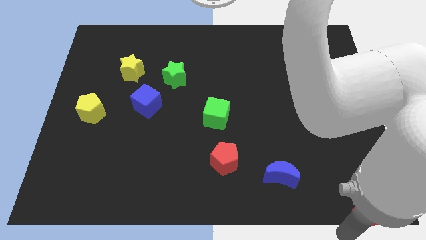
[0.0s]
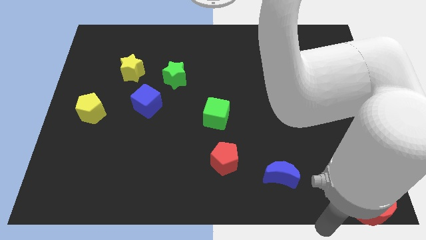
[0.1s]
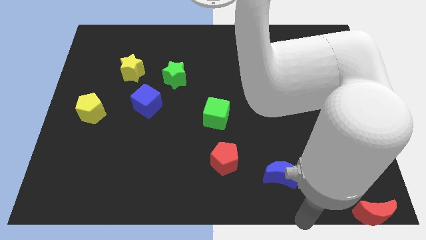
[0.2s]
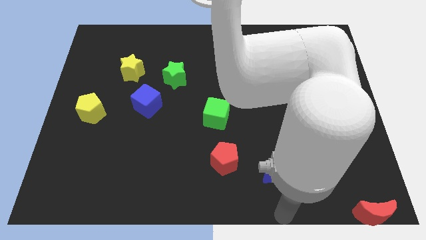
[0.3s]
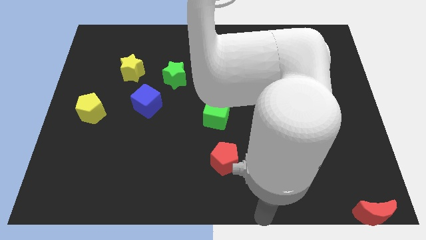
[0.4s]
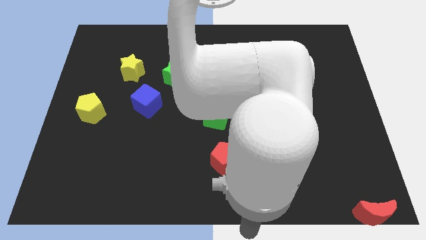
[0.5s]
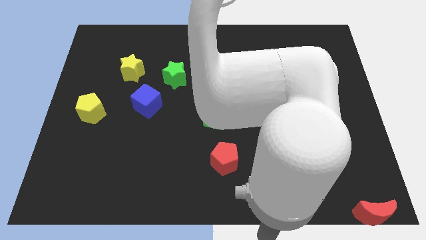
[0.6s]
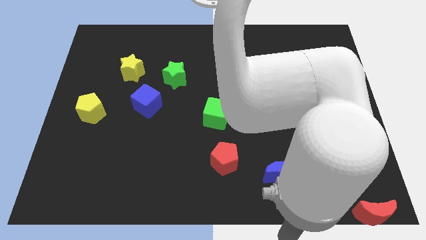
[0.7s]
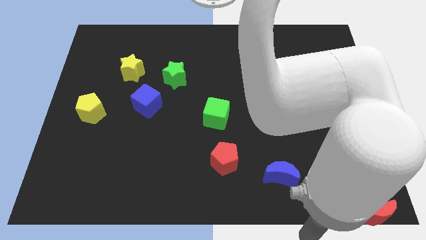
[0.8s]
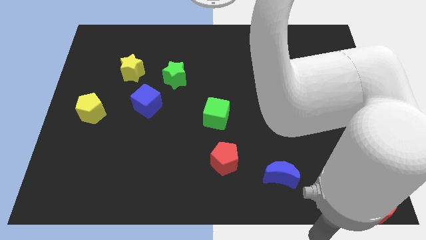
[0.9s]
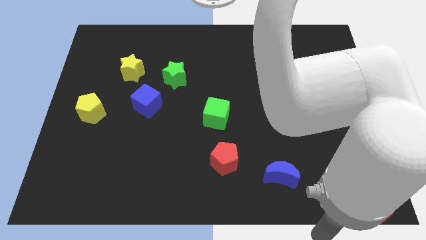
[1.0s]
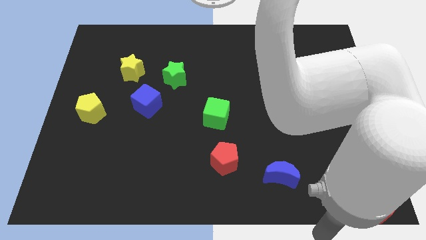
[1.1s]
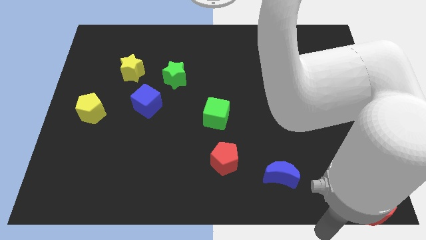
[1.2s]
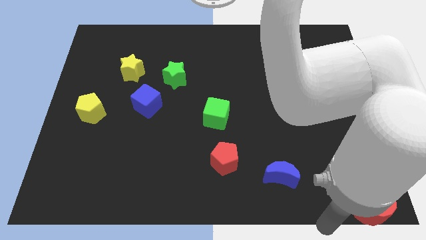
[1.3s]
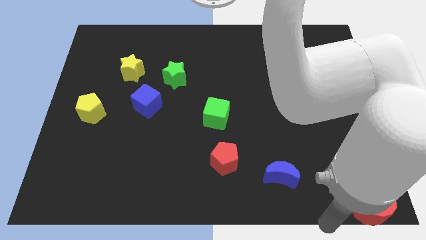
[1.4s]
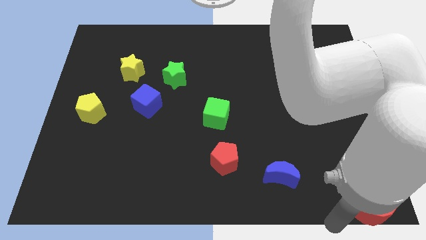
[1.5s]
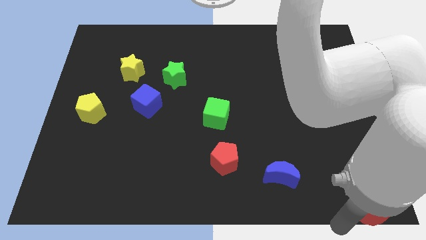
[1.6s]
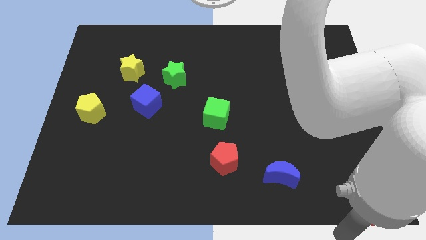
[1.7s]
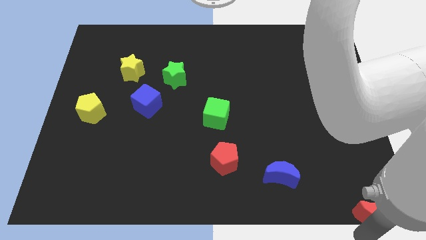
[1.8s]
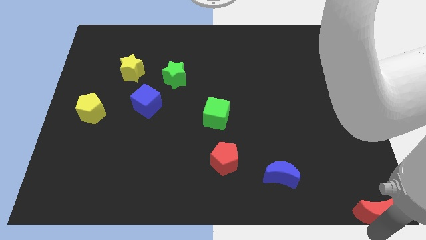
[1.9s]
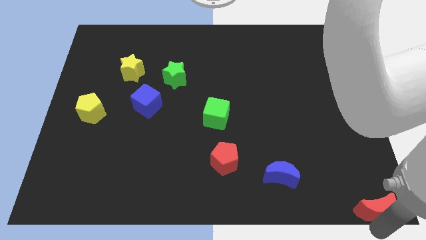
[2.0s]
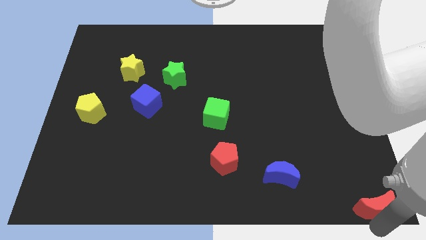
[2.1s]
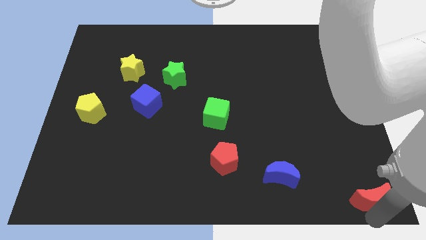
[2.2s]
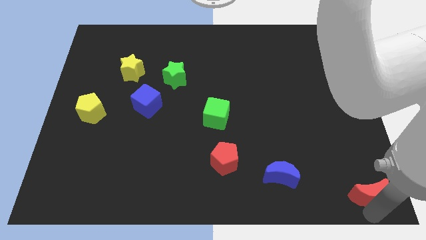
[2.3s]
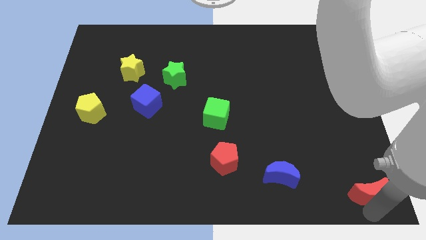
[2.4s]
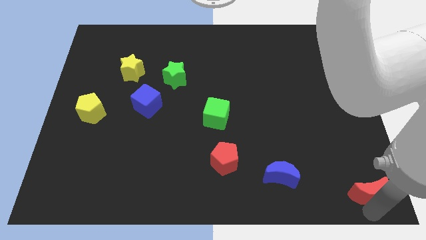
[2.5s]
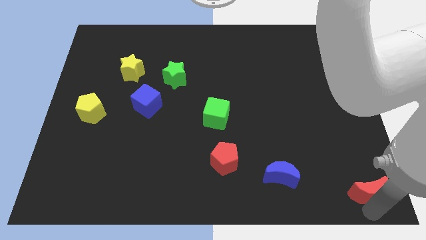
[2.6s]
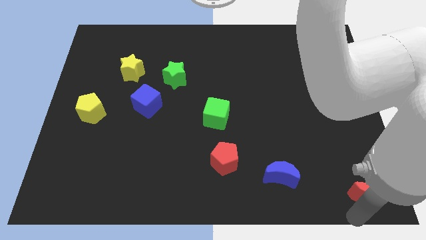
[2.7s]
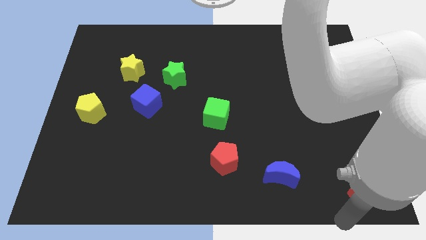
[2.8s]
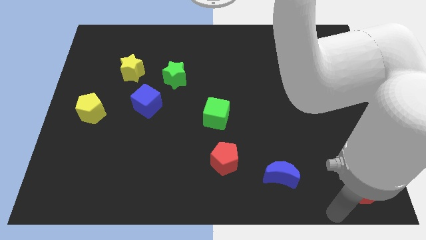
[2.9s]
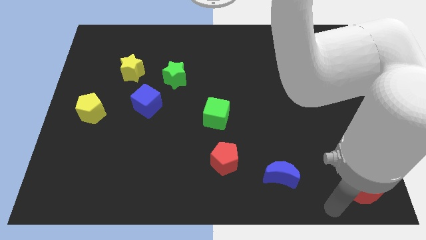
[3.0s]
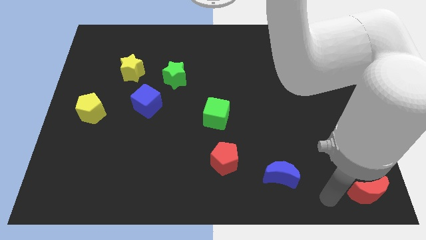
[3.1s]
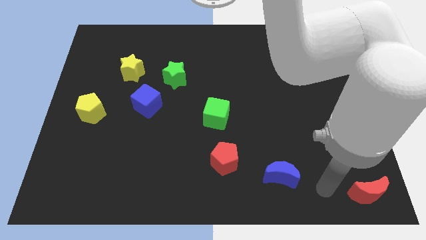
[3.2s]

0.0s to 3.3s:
slightly push the red crescent towards the top side of board

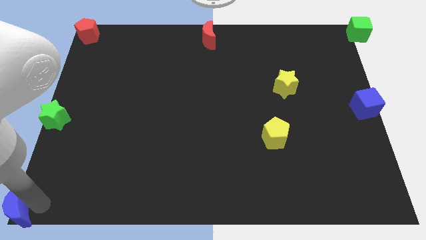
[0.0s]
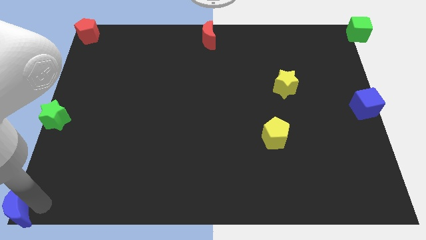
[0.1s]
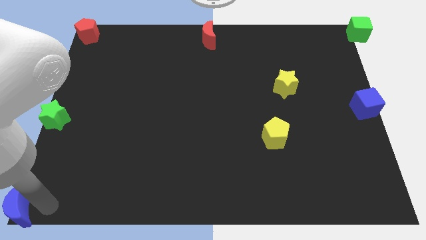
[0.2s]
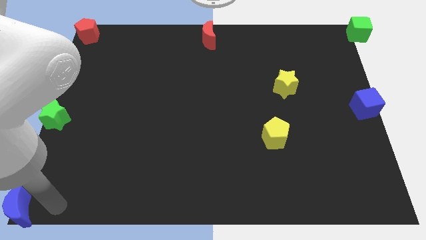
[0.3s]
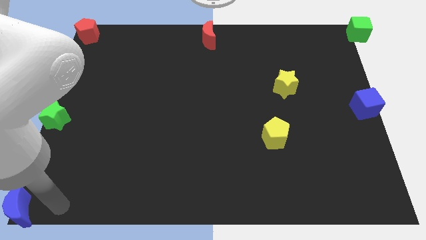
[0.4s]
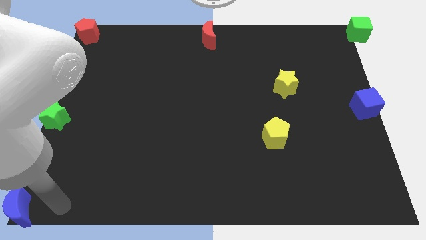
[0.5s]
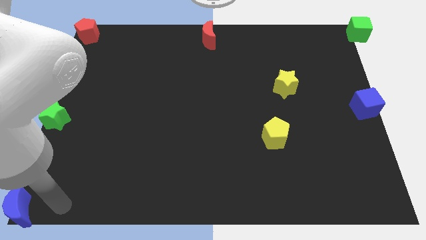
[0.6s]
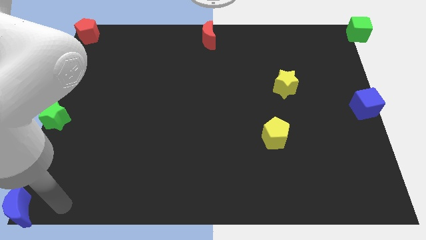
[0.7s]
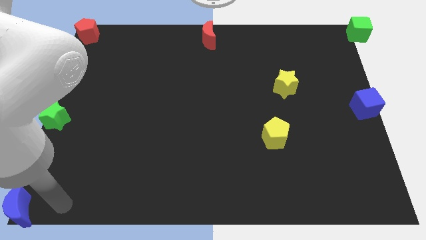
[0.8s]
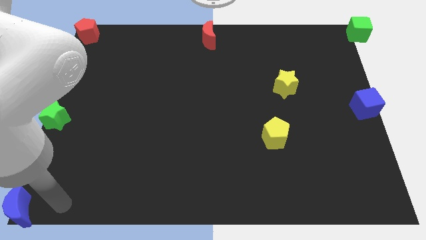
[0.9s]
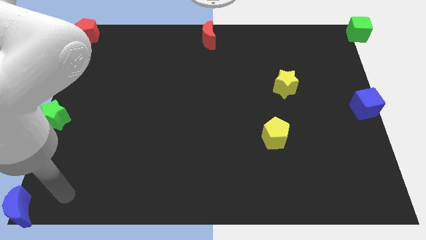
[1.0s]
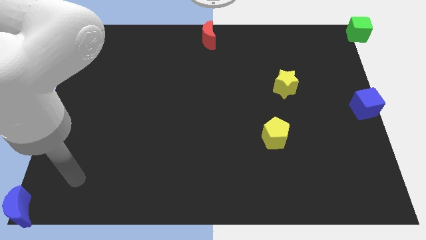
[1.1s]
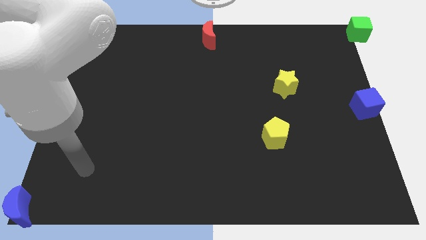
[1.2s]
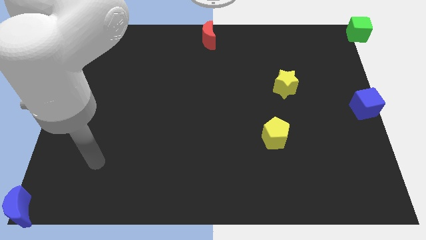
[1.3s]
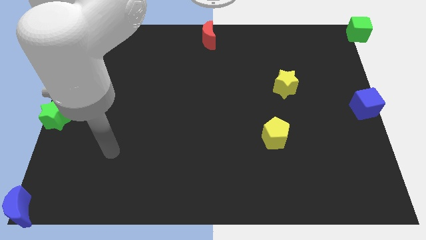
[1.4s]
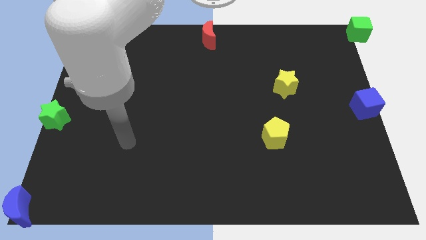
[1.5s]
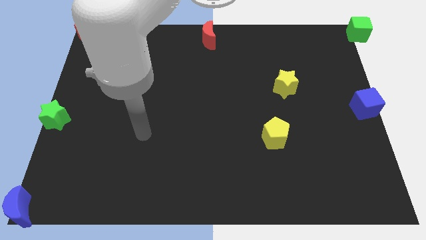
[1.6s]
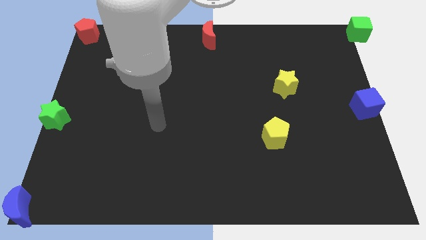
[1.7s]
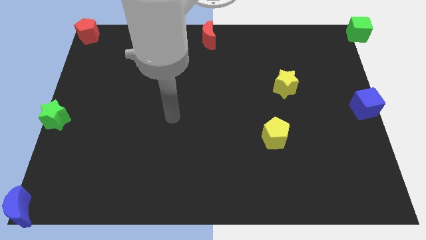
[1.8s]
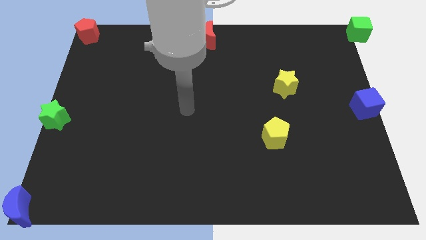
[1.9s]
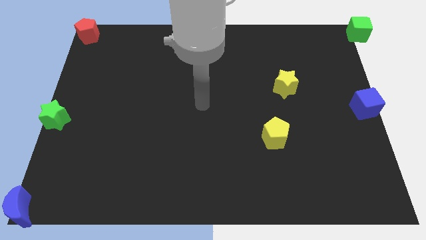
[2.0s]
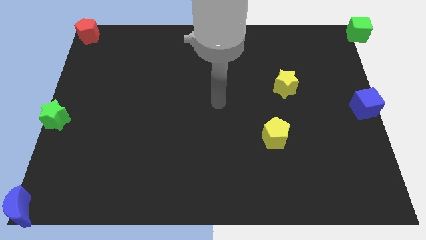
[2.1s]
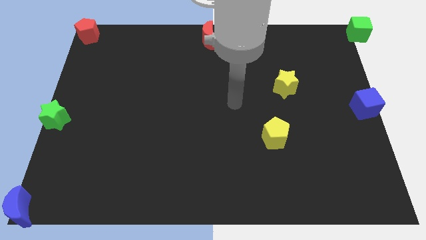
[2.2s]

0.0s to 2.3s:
point your arm at the center of the board

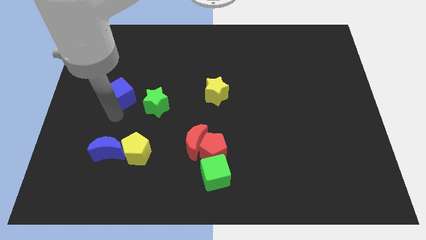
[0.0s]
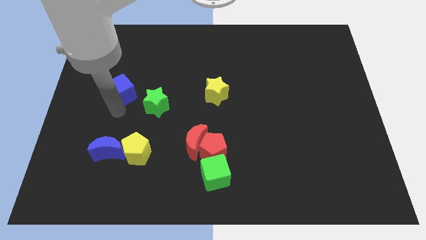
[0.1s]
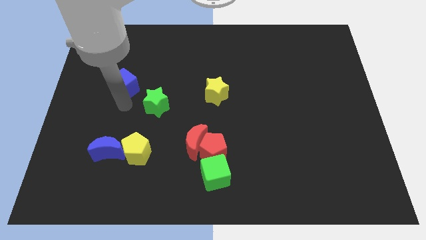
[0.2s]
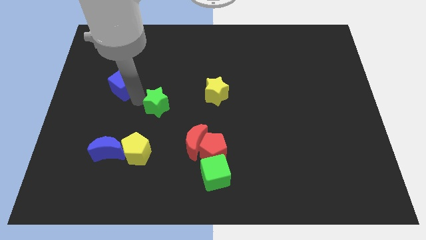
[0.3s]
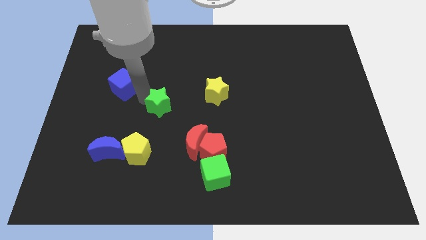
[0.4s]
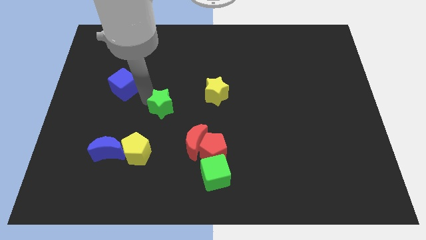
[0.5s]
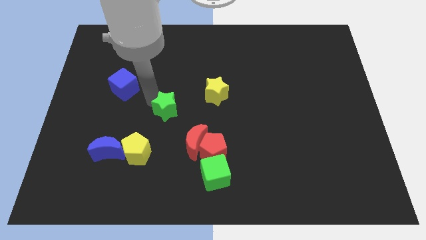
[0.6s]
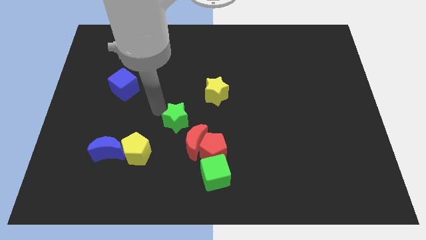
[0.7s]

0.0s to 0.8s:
move the green star towards the red moon

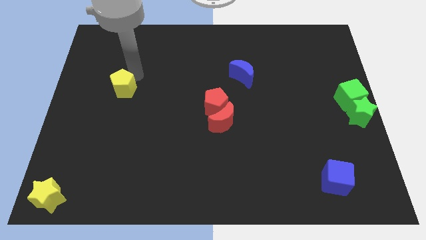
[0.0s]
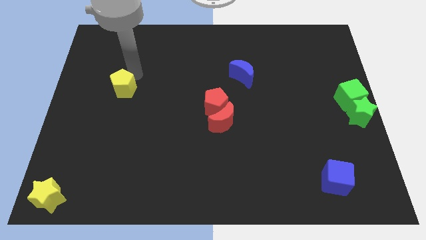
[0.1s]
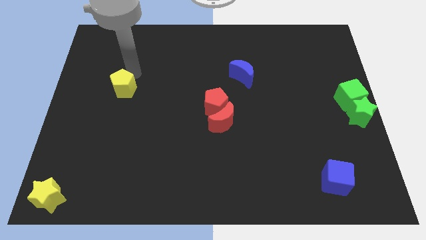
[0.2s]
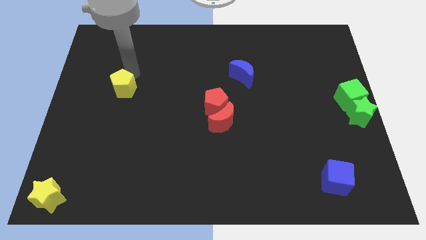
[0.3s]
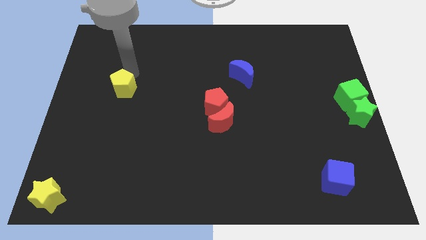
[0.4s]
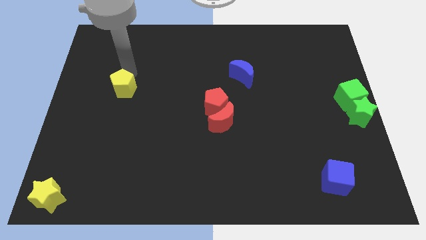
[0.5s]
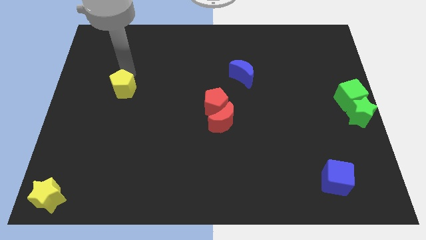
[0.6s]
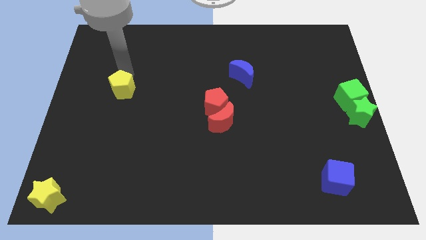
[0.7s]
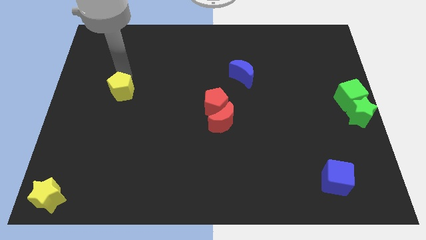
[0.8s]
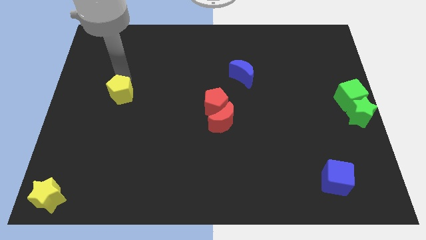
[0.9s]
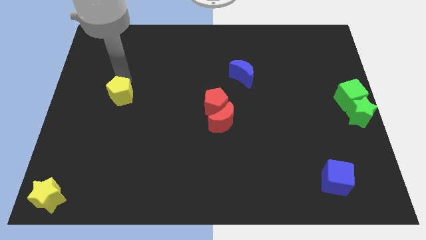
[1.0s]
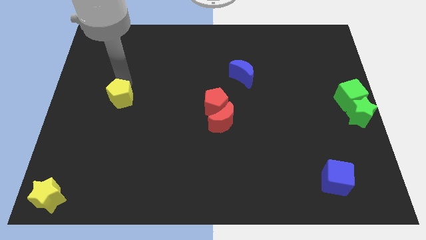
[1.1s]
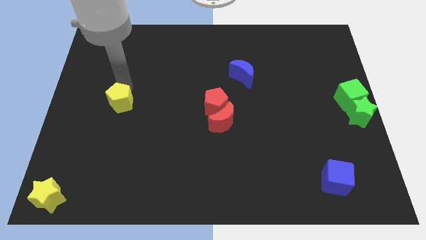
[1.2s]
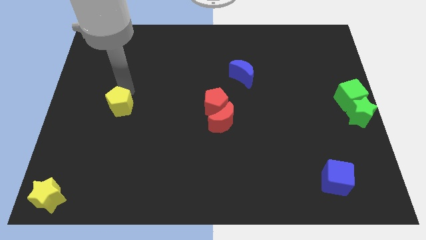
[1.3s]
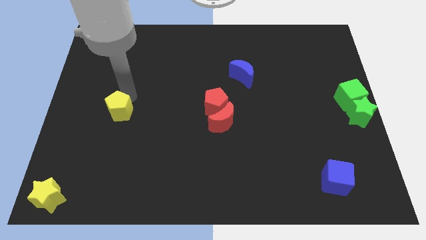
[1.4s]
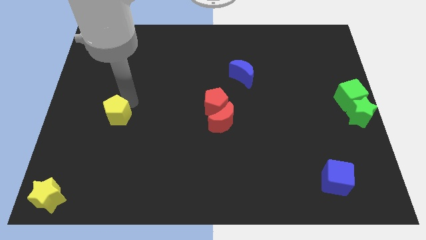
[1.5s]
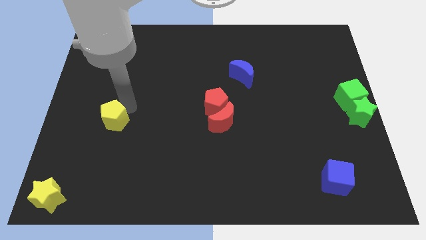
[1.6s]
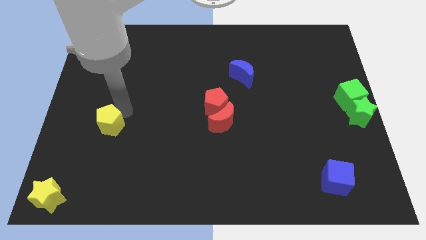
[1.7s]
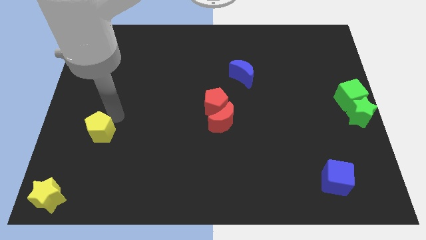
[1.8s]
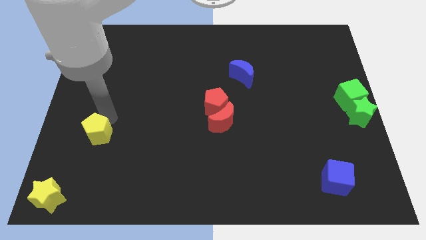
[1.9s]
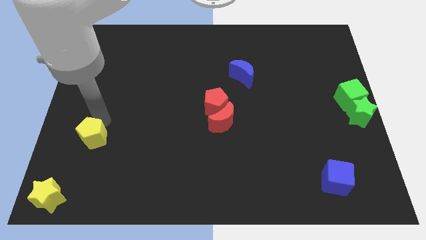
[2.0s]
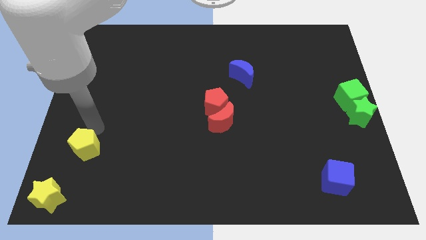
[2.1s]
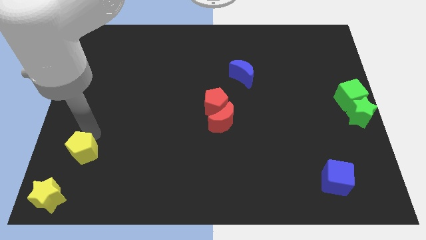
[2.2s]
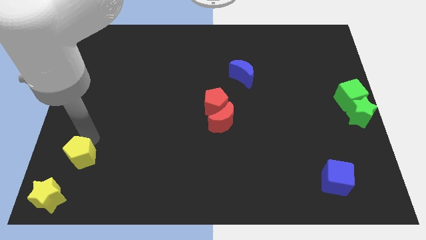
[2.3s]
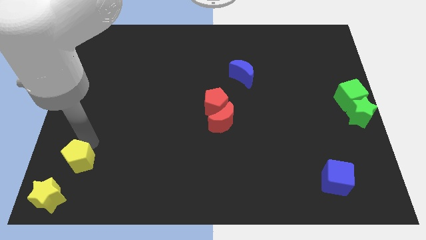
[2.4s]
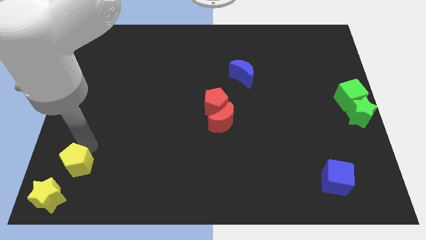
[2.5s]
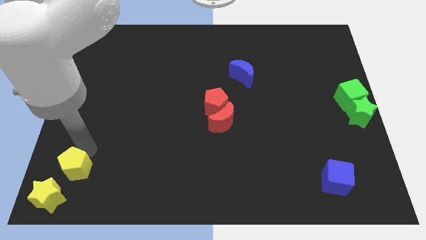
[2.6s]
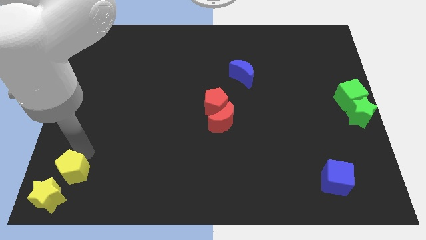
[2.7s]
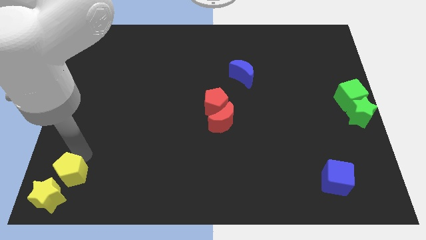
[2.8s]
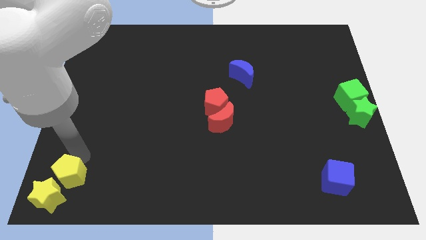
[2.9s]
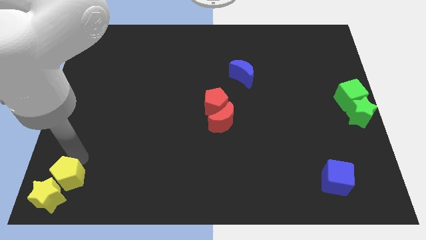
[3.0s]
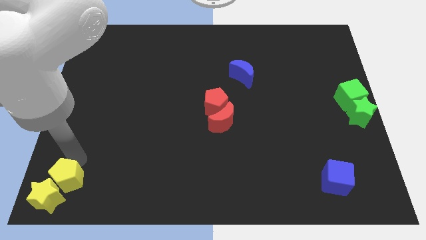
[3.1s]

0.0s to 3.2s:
move the yellow pentagon to the top right of the yellow star
